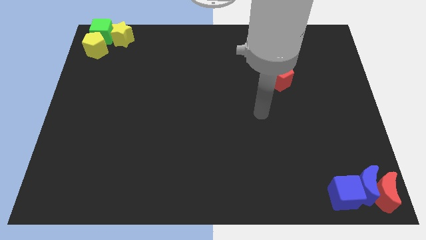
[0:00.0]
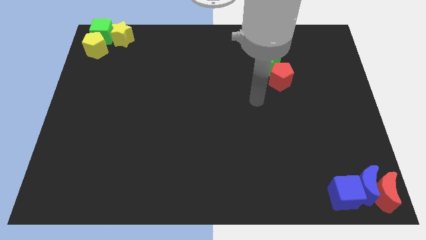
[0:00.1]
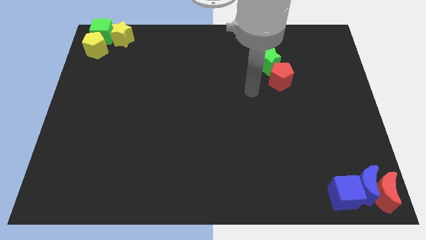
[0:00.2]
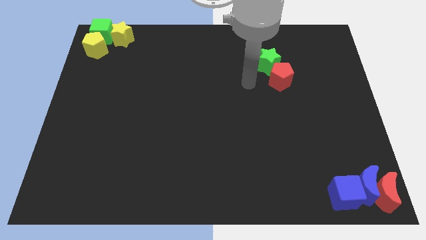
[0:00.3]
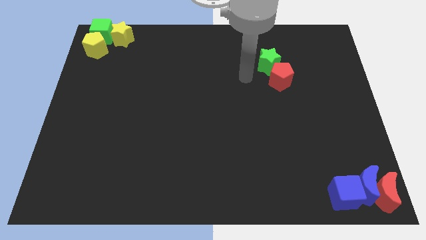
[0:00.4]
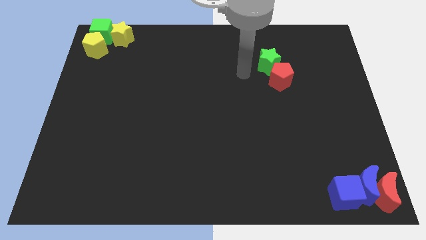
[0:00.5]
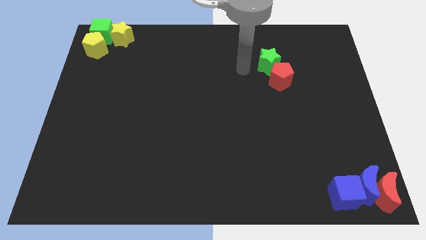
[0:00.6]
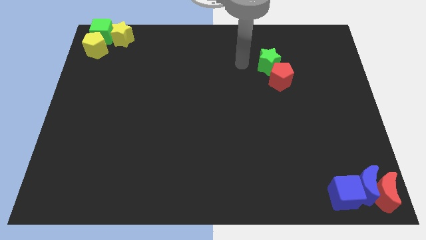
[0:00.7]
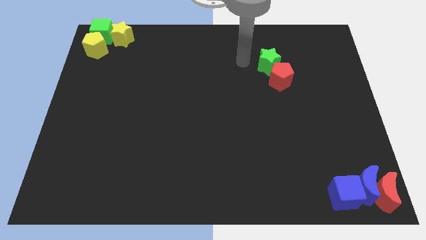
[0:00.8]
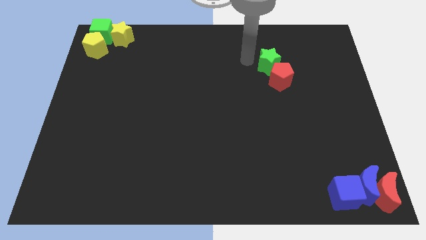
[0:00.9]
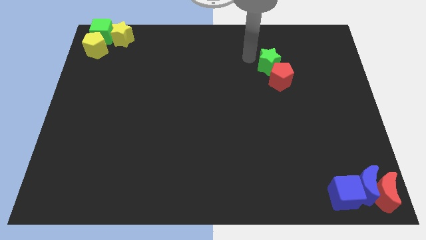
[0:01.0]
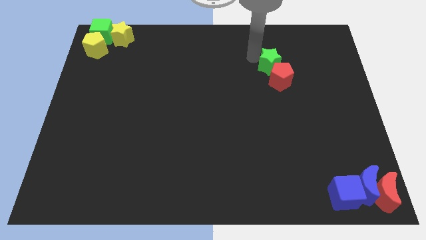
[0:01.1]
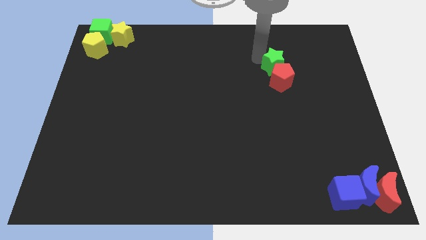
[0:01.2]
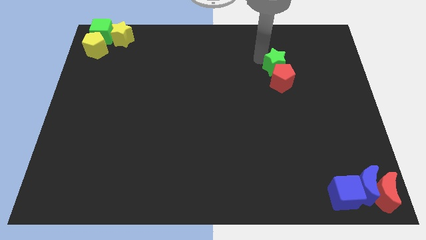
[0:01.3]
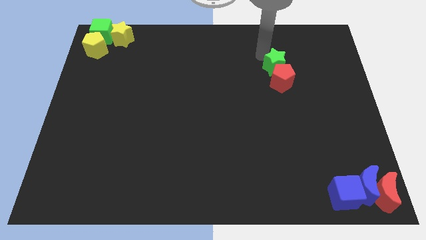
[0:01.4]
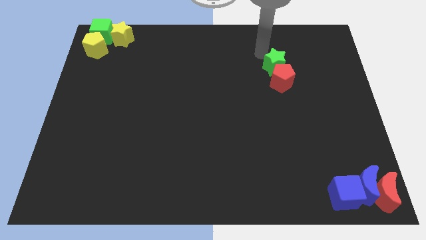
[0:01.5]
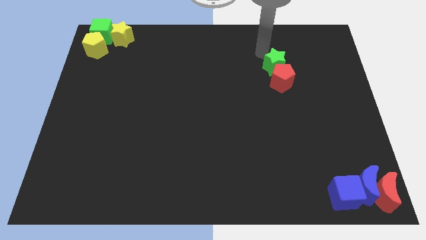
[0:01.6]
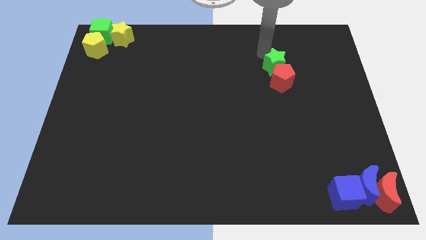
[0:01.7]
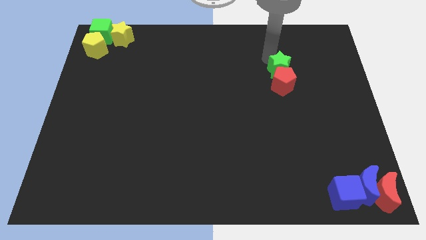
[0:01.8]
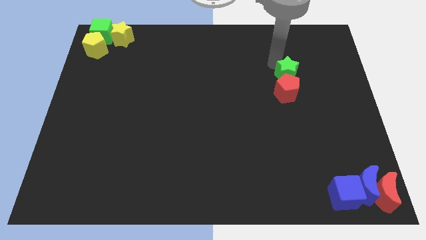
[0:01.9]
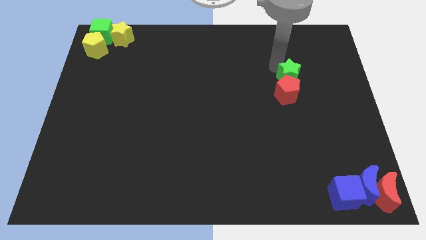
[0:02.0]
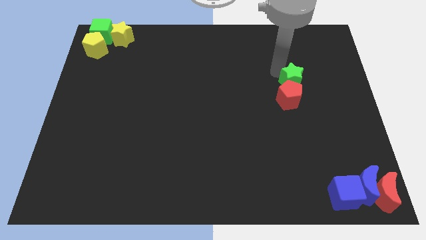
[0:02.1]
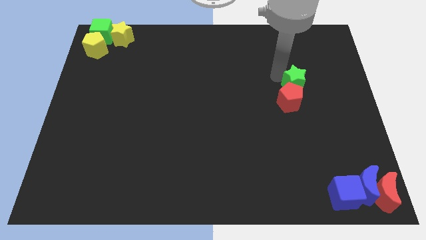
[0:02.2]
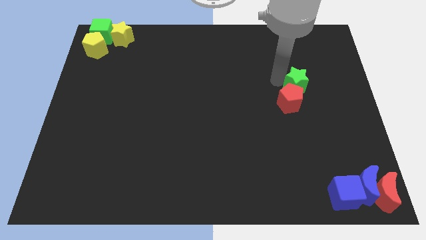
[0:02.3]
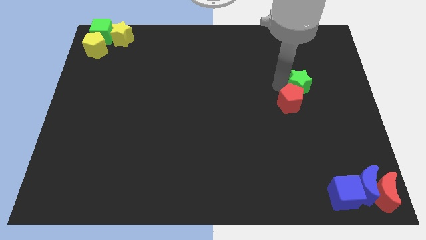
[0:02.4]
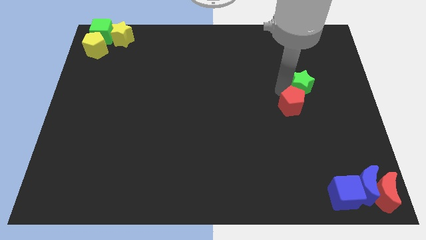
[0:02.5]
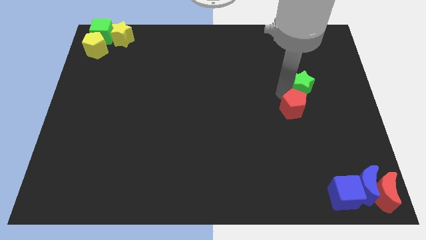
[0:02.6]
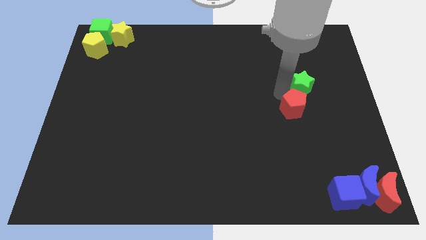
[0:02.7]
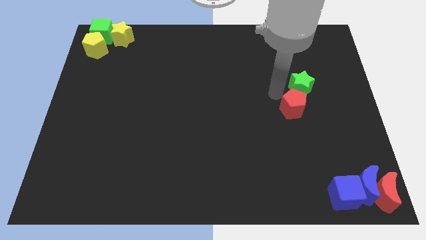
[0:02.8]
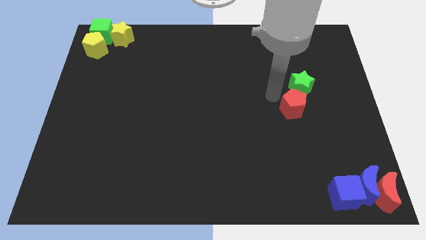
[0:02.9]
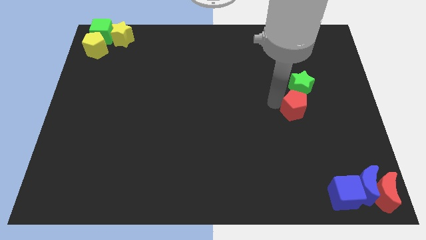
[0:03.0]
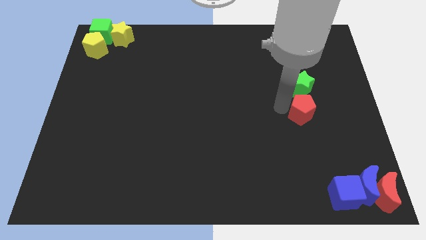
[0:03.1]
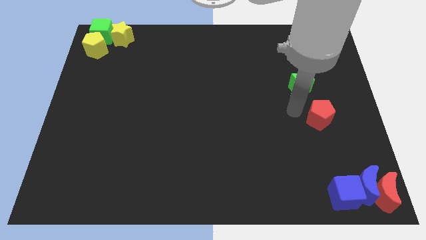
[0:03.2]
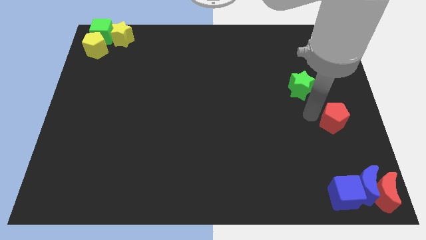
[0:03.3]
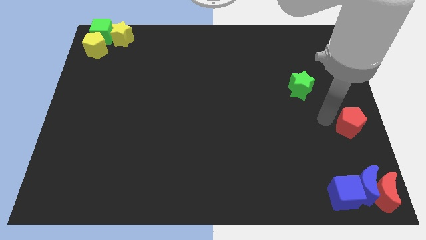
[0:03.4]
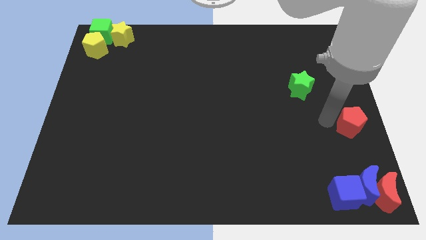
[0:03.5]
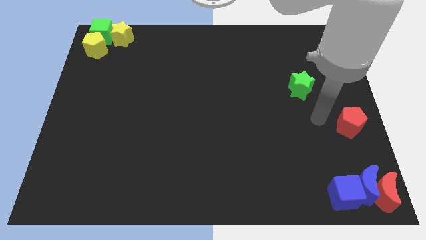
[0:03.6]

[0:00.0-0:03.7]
place red pentagon above blue crescent

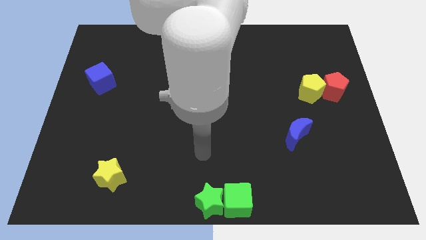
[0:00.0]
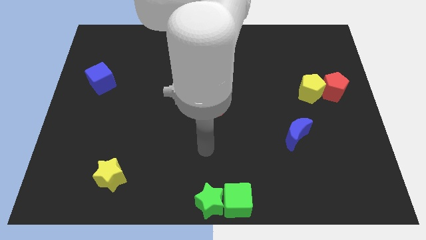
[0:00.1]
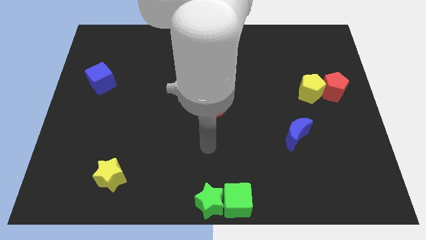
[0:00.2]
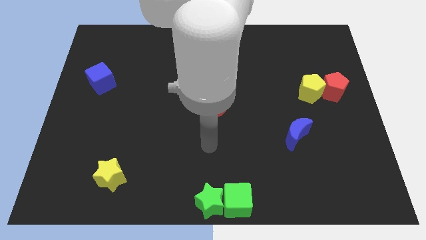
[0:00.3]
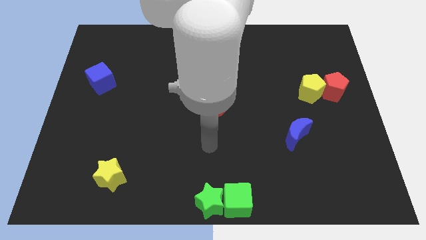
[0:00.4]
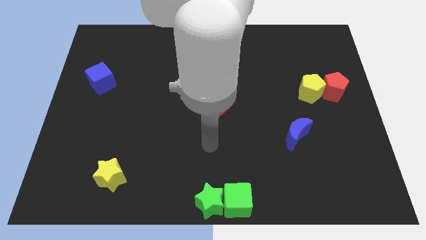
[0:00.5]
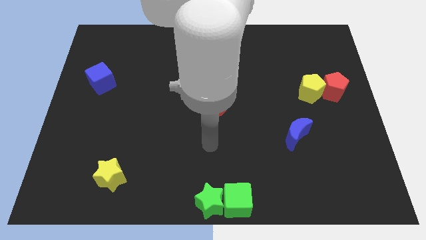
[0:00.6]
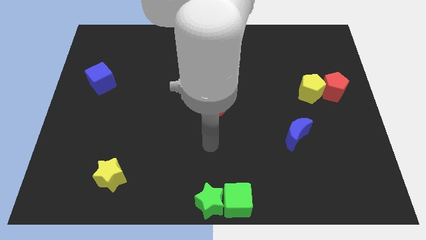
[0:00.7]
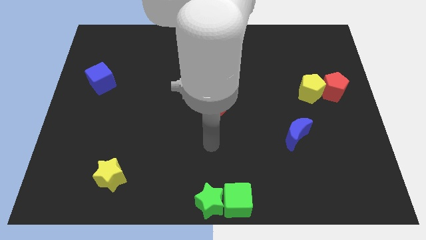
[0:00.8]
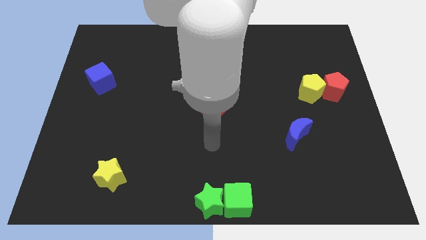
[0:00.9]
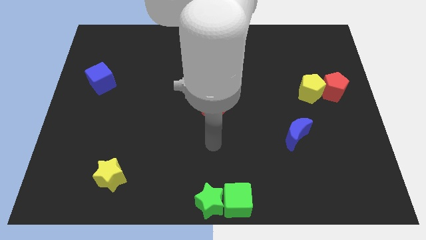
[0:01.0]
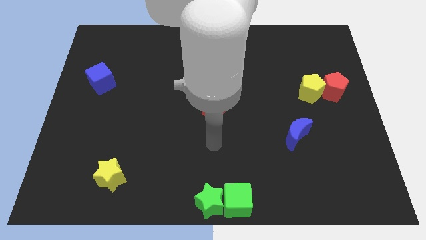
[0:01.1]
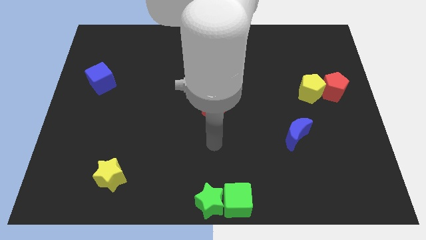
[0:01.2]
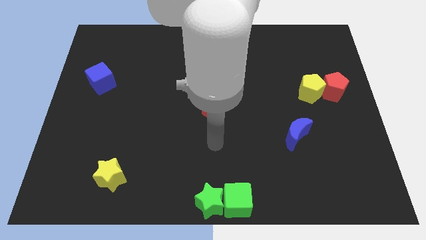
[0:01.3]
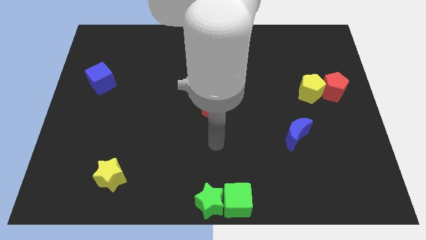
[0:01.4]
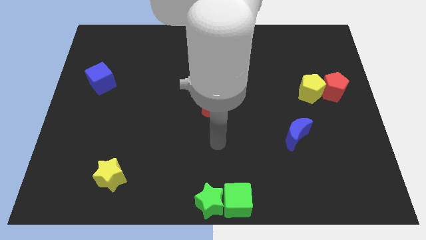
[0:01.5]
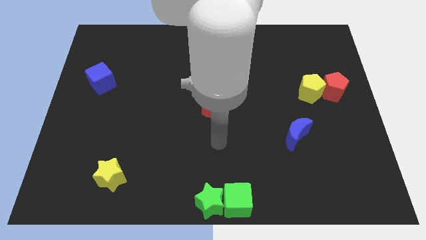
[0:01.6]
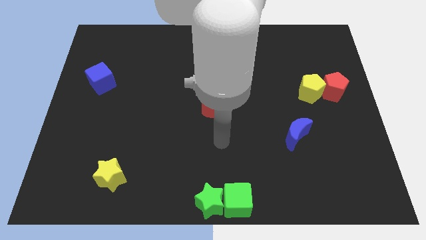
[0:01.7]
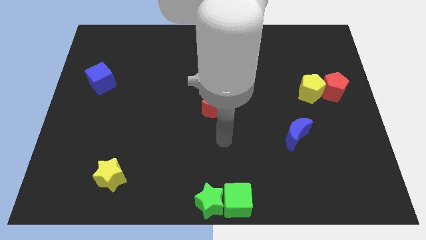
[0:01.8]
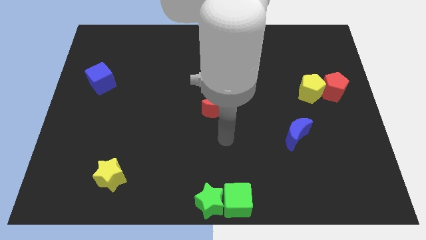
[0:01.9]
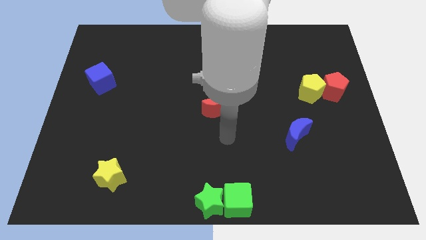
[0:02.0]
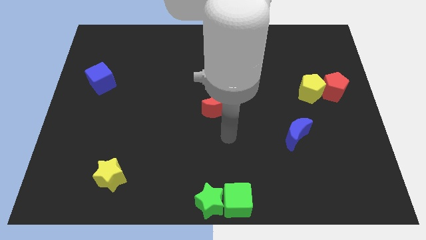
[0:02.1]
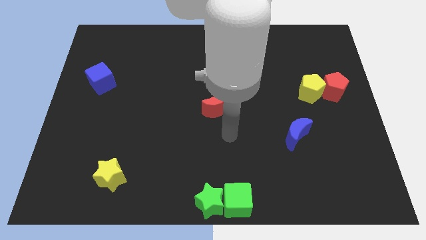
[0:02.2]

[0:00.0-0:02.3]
move your arm towards the red moon

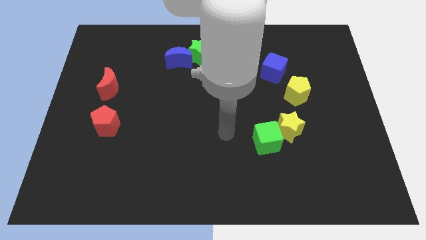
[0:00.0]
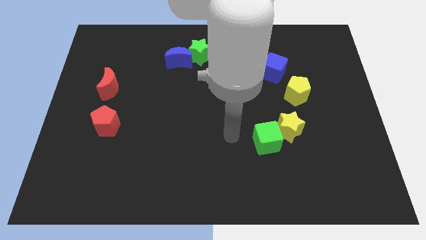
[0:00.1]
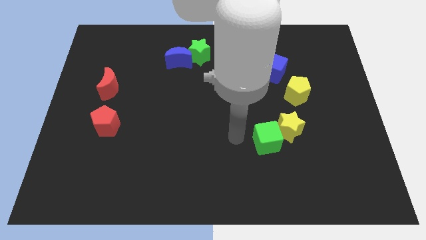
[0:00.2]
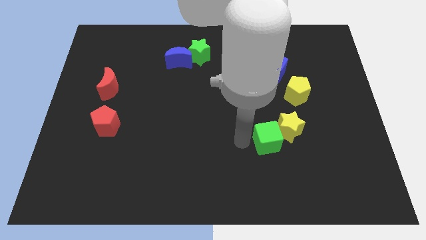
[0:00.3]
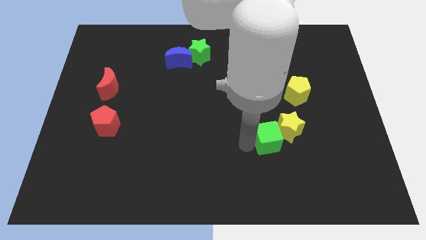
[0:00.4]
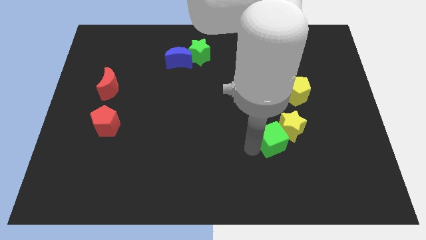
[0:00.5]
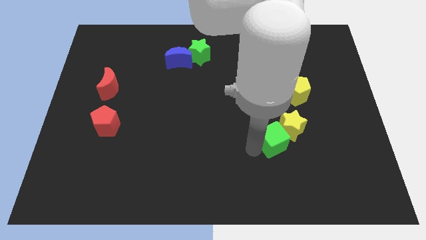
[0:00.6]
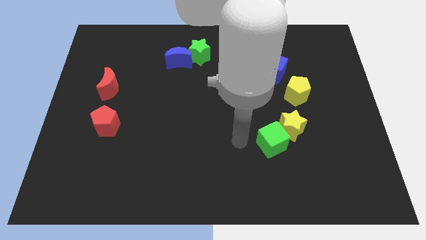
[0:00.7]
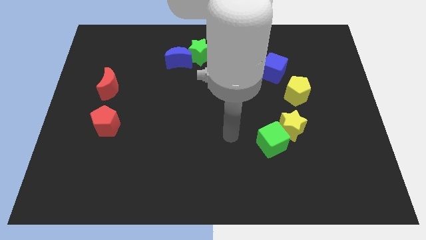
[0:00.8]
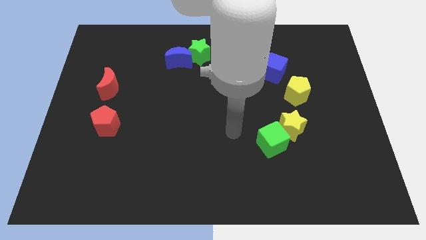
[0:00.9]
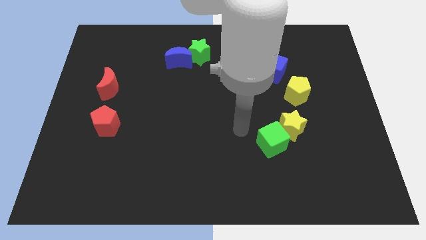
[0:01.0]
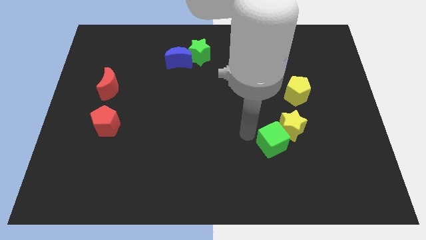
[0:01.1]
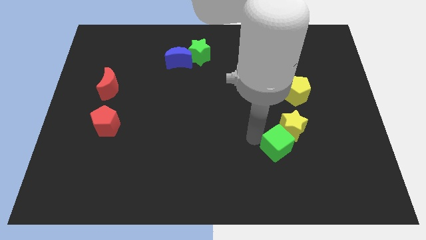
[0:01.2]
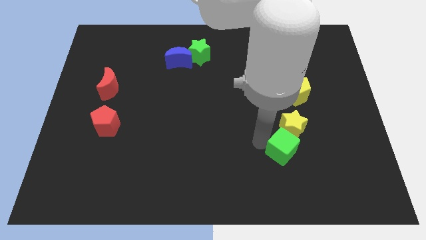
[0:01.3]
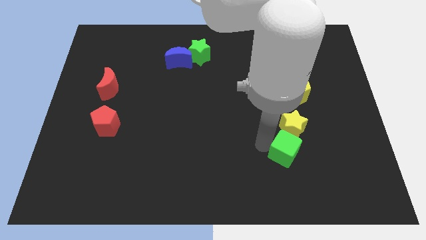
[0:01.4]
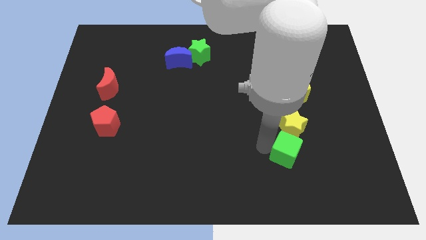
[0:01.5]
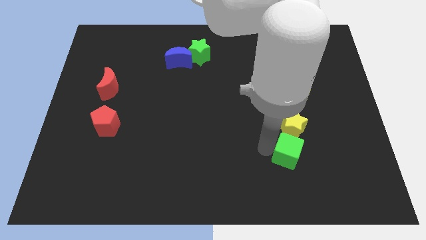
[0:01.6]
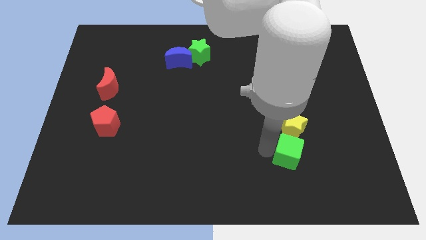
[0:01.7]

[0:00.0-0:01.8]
move the green cube to the bottom side of the yellow star

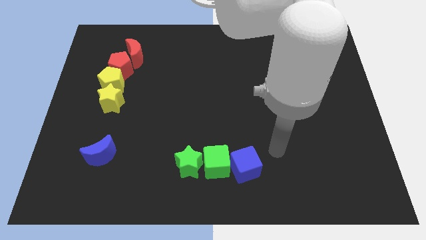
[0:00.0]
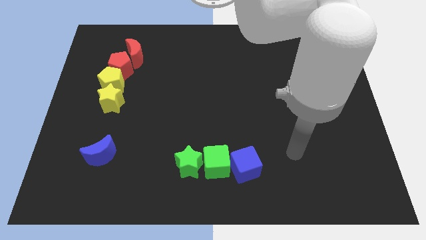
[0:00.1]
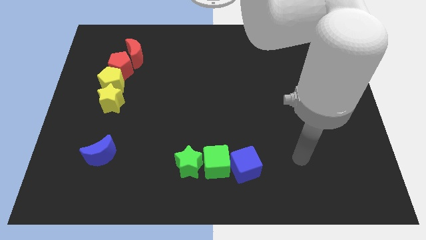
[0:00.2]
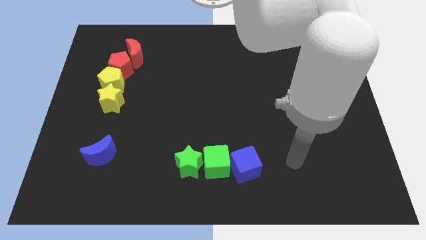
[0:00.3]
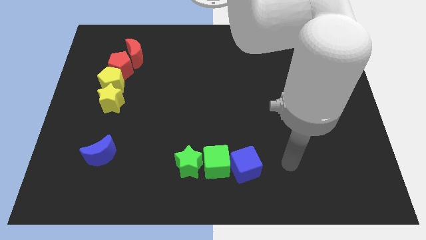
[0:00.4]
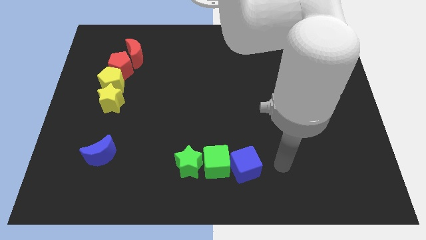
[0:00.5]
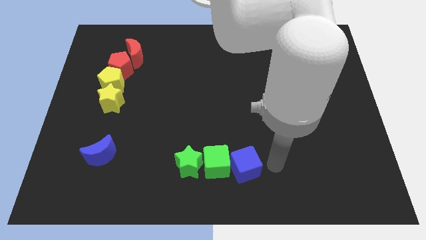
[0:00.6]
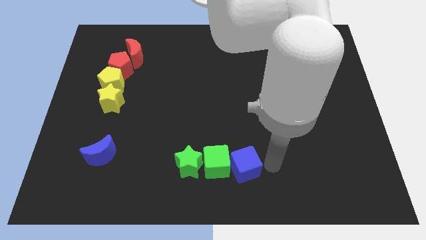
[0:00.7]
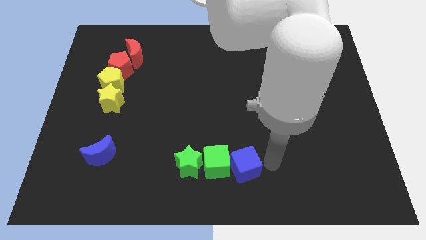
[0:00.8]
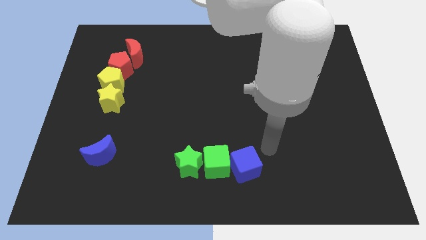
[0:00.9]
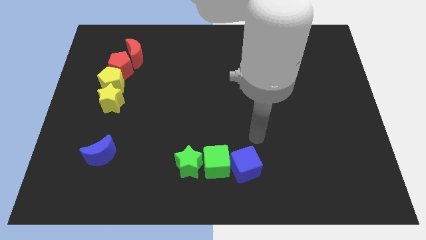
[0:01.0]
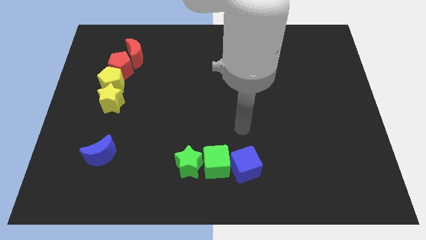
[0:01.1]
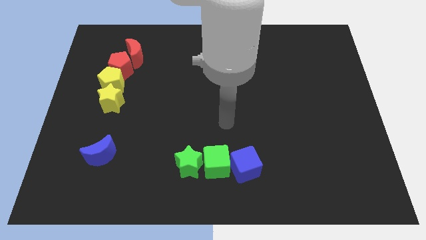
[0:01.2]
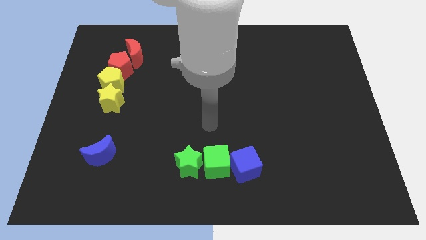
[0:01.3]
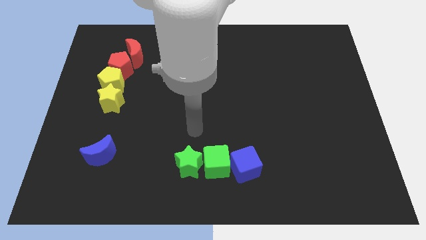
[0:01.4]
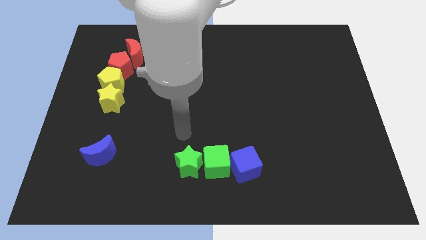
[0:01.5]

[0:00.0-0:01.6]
move your arm above the green star
